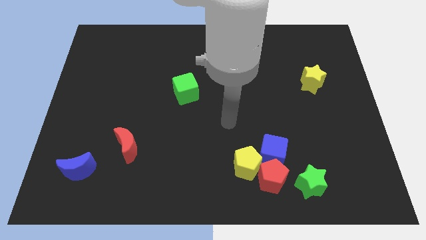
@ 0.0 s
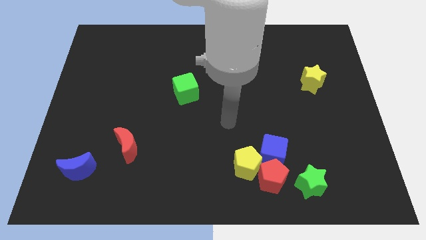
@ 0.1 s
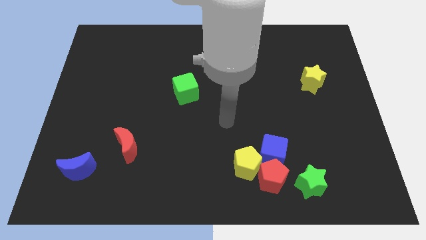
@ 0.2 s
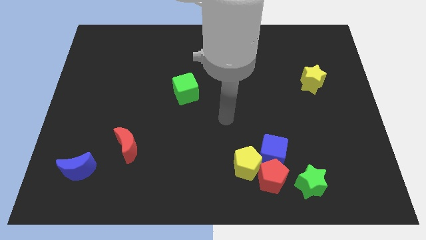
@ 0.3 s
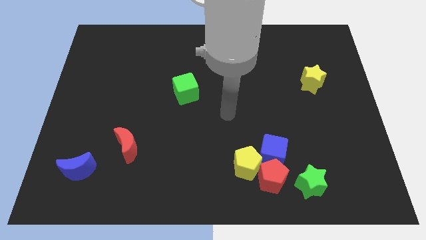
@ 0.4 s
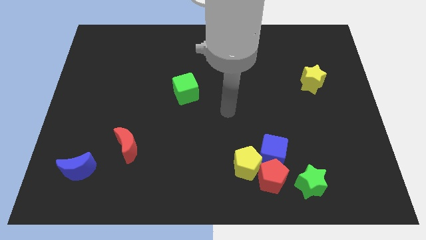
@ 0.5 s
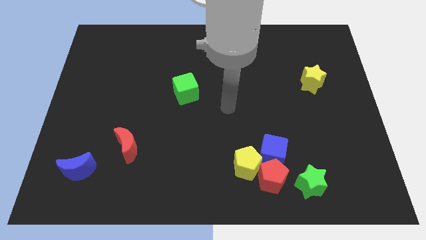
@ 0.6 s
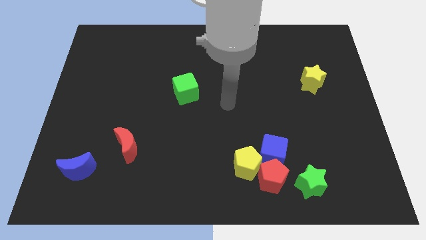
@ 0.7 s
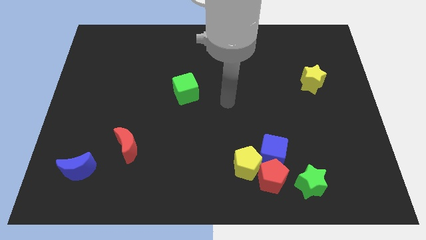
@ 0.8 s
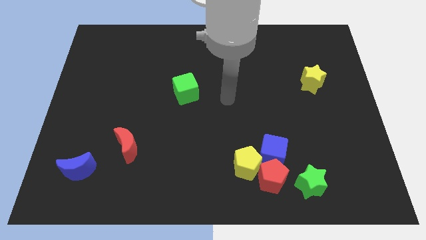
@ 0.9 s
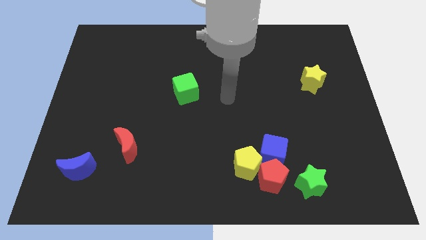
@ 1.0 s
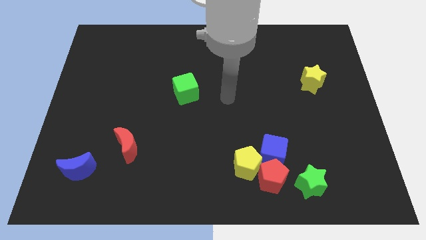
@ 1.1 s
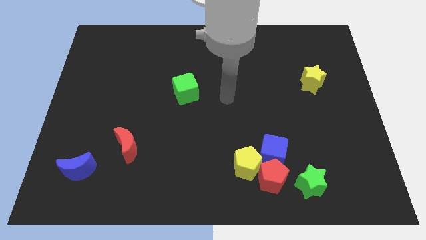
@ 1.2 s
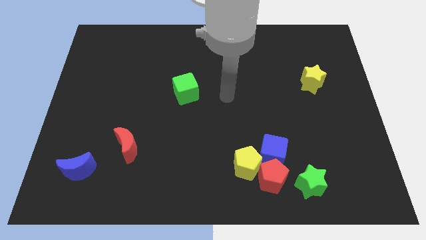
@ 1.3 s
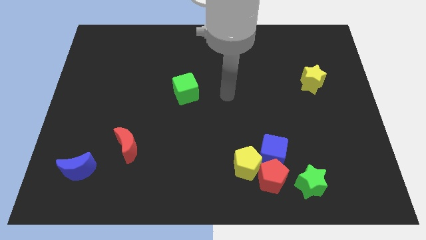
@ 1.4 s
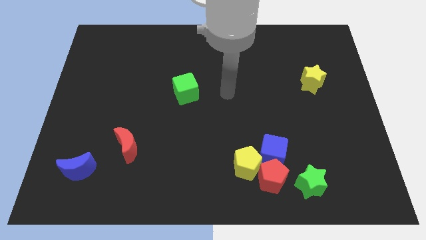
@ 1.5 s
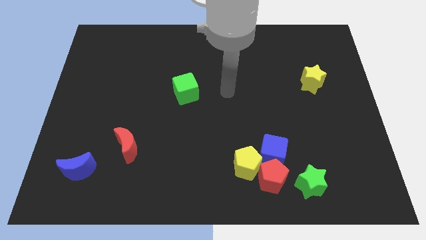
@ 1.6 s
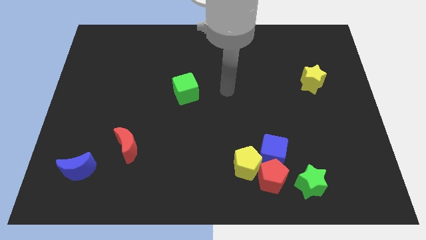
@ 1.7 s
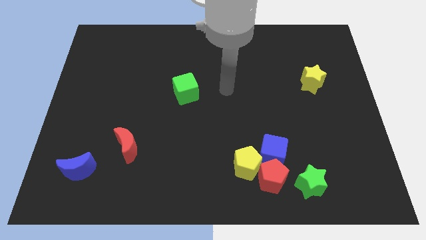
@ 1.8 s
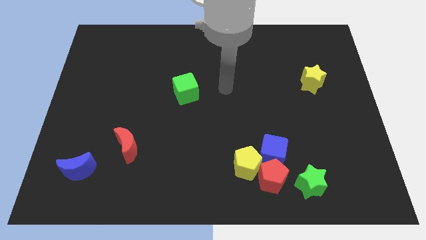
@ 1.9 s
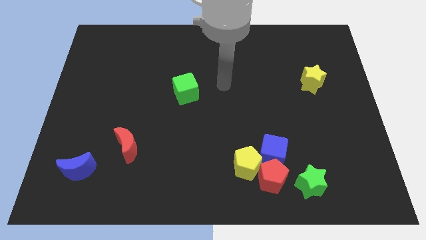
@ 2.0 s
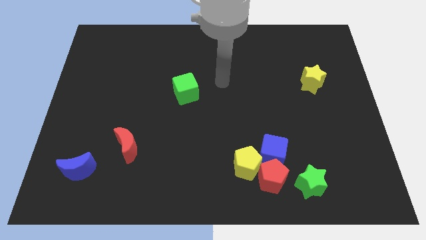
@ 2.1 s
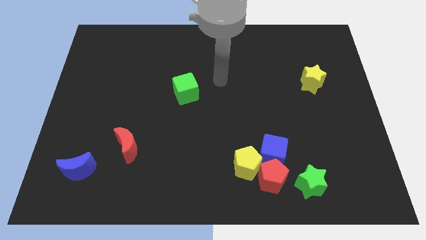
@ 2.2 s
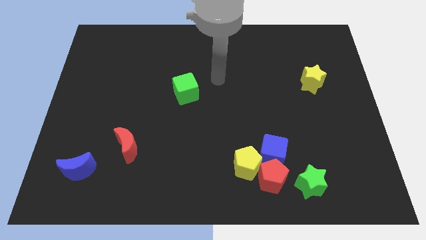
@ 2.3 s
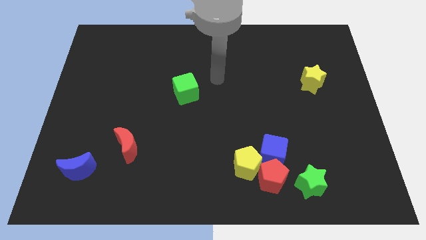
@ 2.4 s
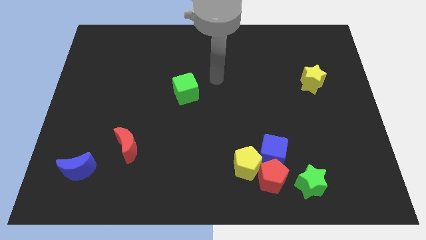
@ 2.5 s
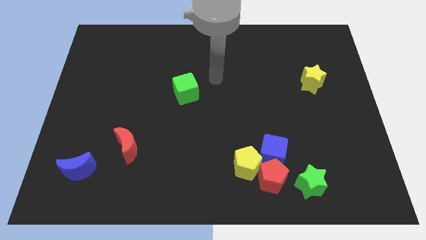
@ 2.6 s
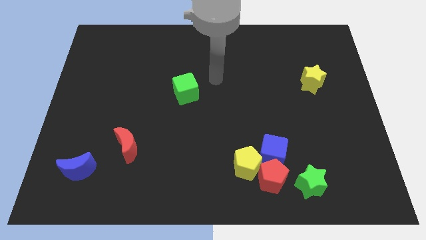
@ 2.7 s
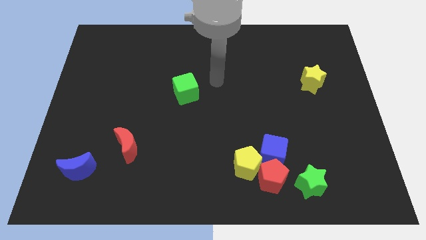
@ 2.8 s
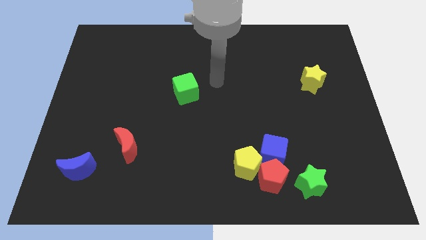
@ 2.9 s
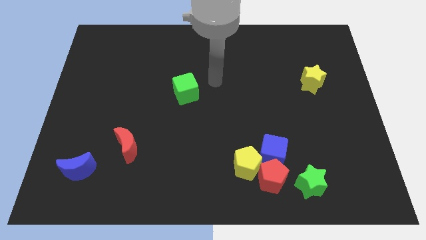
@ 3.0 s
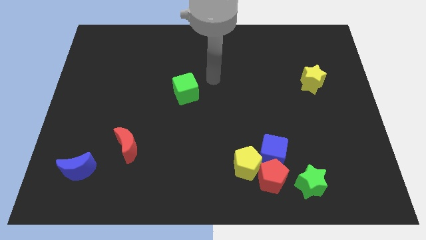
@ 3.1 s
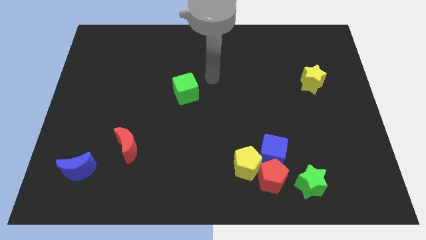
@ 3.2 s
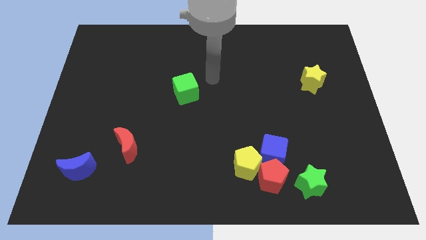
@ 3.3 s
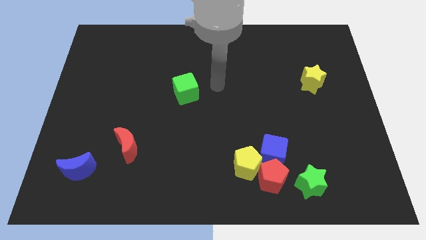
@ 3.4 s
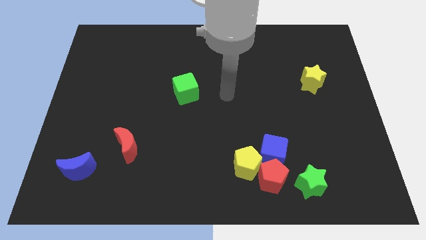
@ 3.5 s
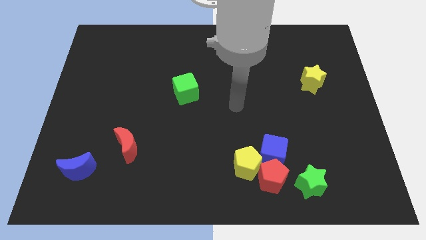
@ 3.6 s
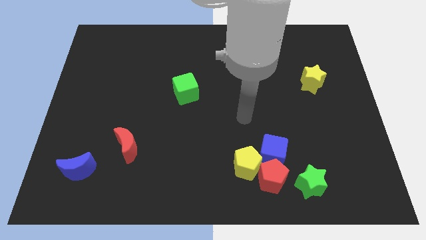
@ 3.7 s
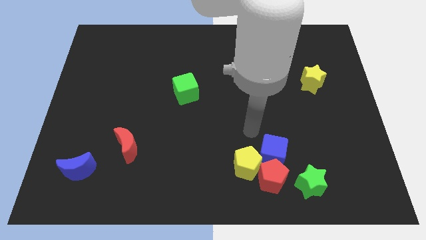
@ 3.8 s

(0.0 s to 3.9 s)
point your arm at the top of the yellow pentagon

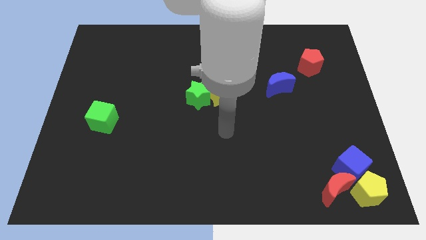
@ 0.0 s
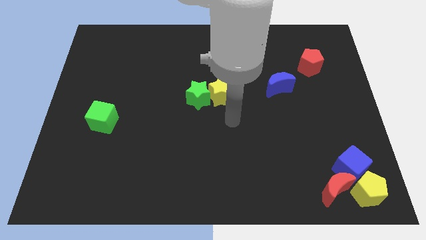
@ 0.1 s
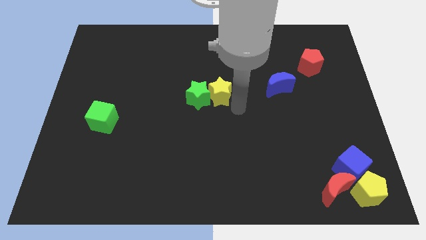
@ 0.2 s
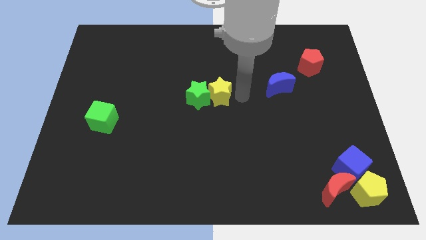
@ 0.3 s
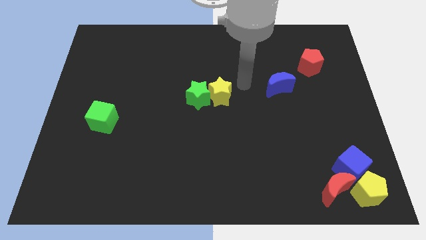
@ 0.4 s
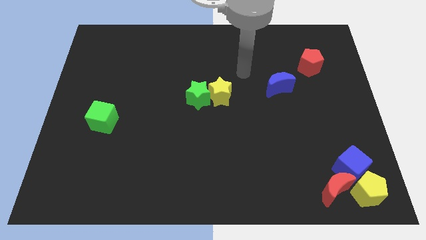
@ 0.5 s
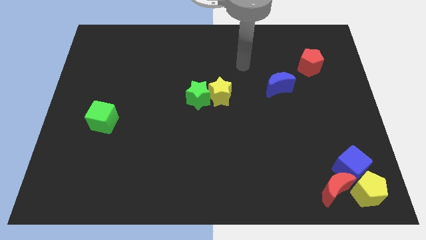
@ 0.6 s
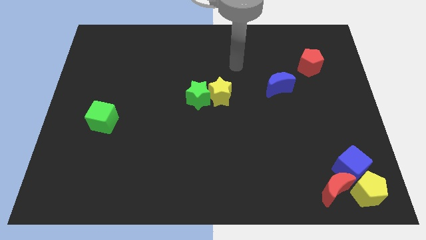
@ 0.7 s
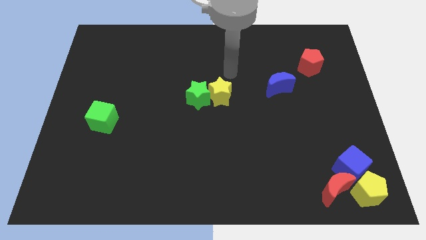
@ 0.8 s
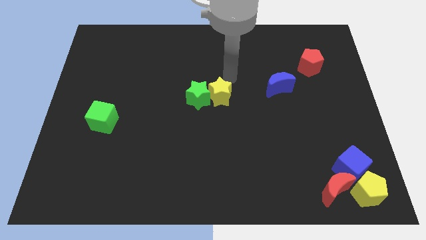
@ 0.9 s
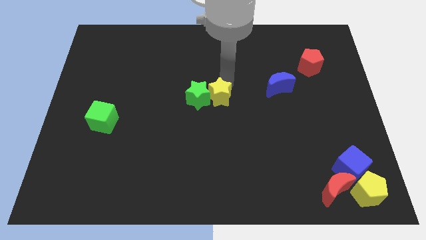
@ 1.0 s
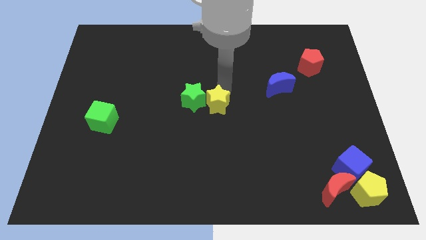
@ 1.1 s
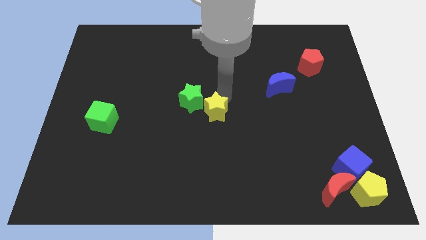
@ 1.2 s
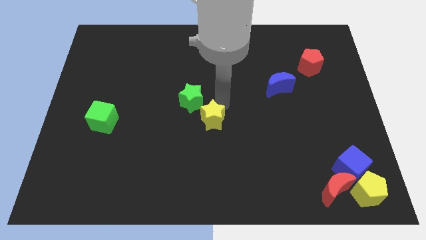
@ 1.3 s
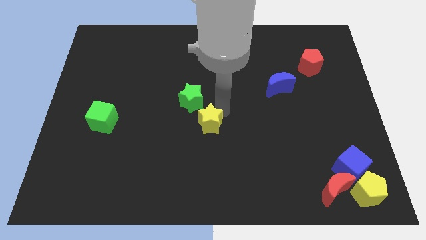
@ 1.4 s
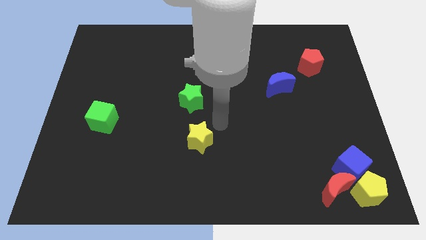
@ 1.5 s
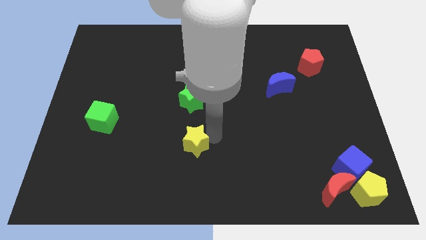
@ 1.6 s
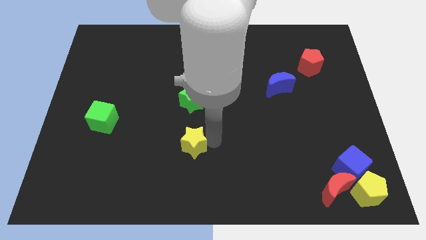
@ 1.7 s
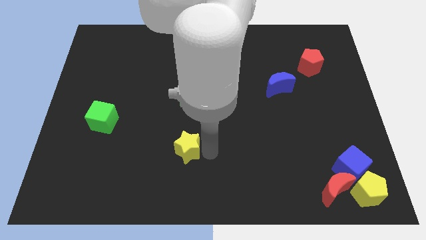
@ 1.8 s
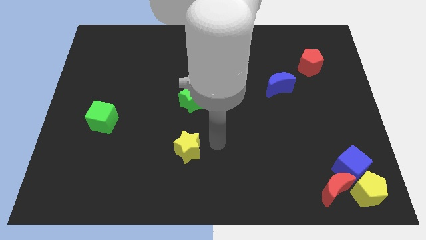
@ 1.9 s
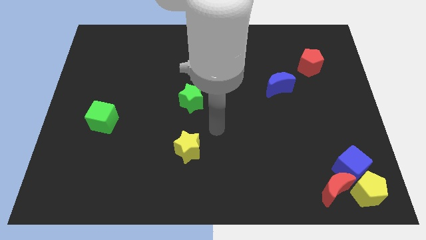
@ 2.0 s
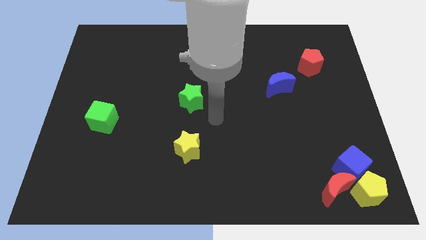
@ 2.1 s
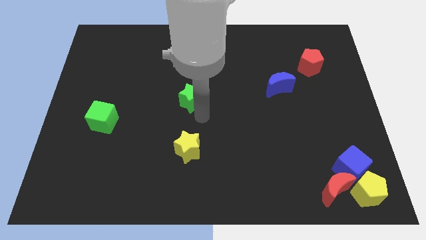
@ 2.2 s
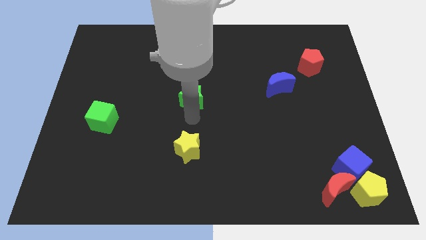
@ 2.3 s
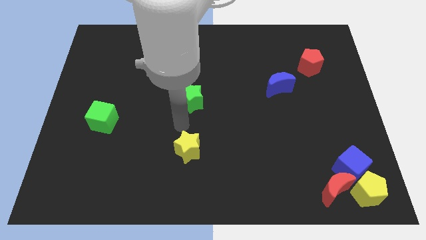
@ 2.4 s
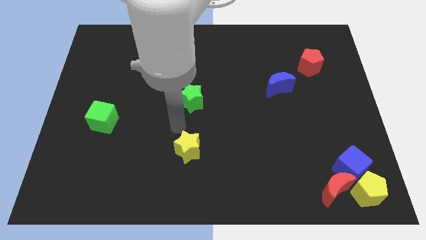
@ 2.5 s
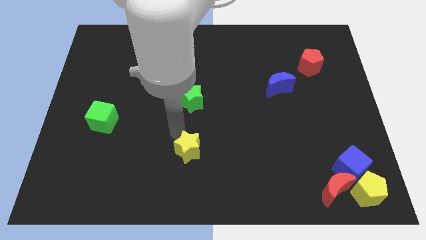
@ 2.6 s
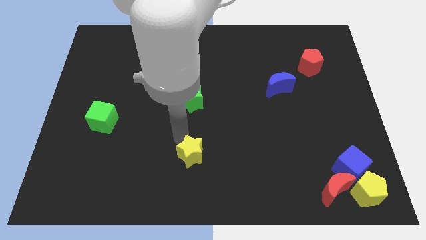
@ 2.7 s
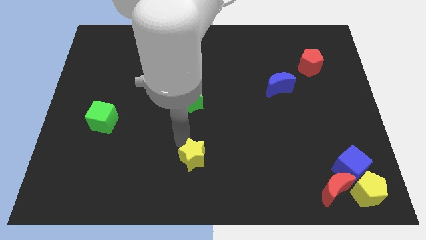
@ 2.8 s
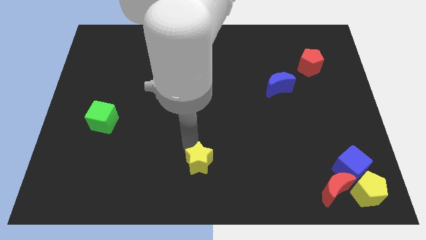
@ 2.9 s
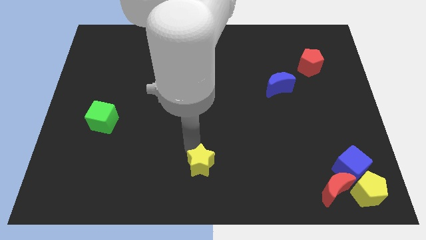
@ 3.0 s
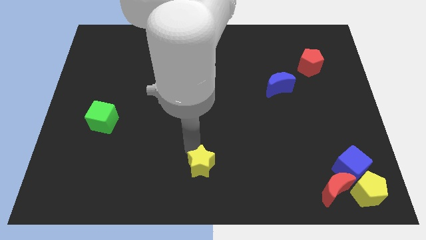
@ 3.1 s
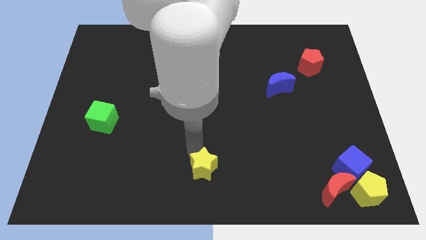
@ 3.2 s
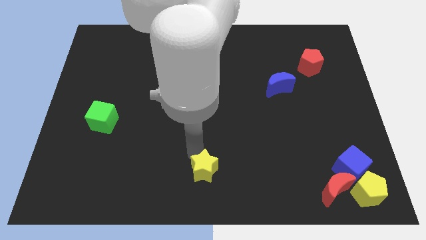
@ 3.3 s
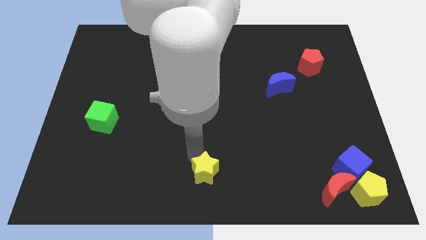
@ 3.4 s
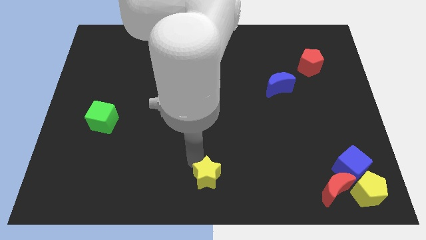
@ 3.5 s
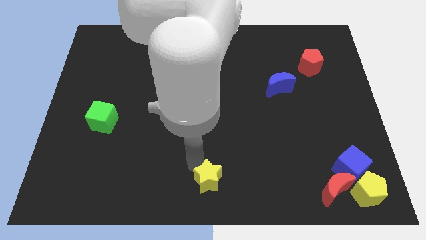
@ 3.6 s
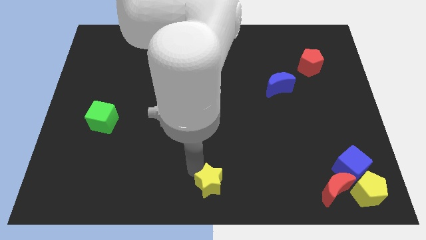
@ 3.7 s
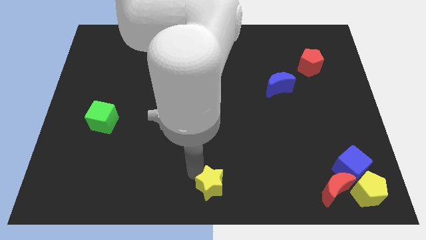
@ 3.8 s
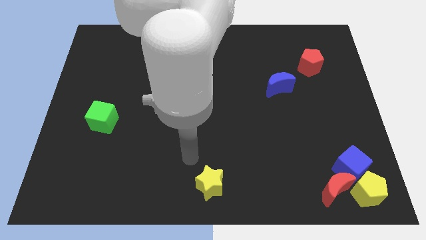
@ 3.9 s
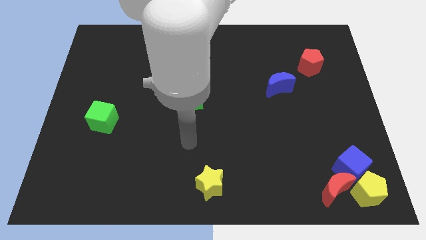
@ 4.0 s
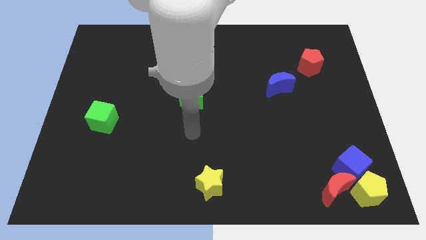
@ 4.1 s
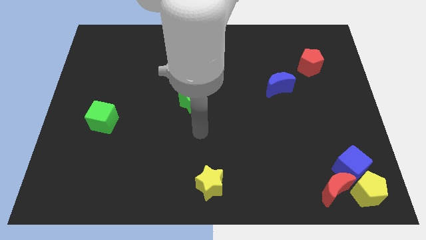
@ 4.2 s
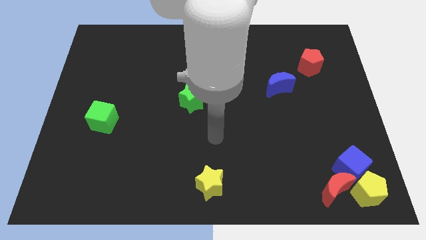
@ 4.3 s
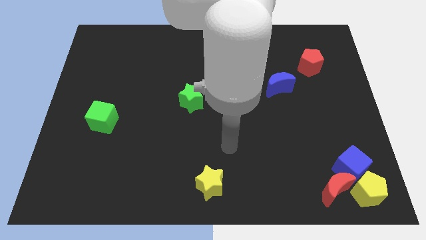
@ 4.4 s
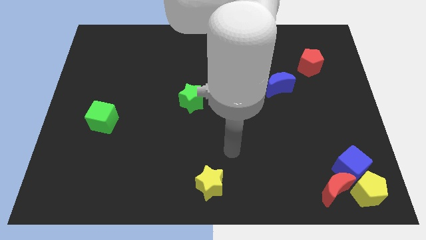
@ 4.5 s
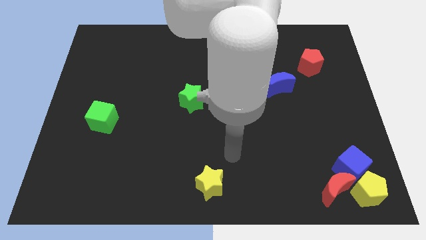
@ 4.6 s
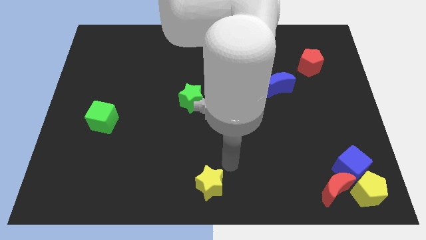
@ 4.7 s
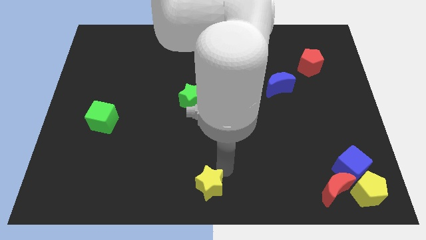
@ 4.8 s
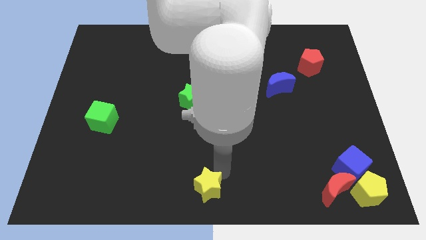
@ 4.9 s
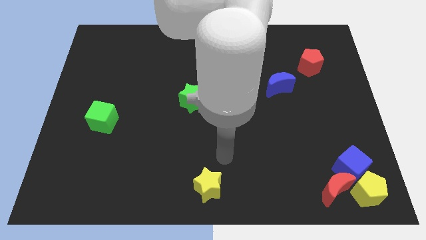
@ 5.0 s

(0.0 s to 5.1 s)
place the yellow star towards the bottom center of the board
